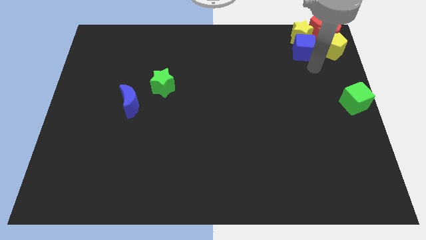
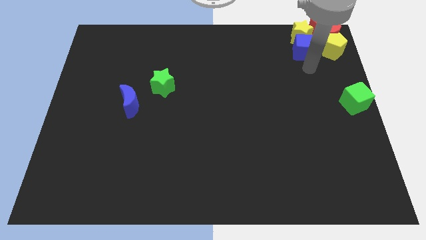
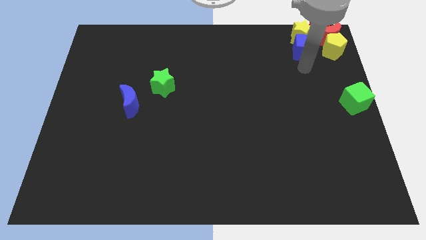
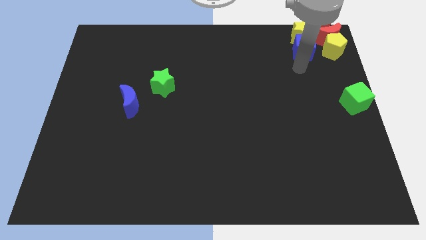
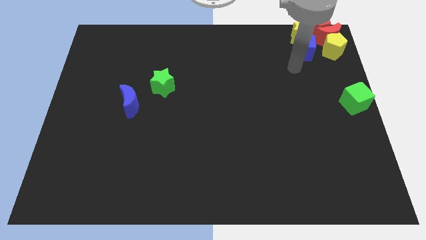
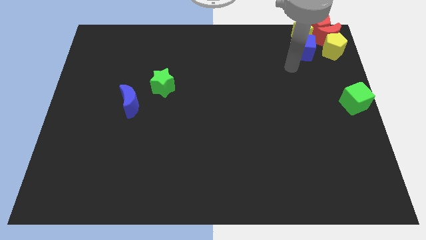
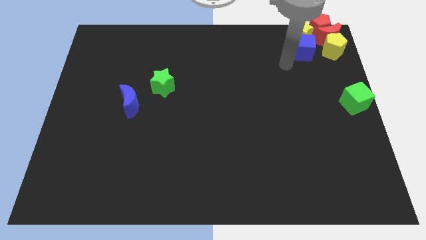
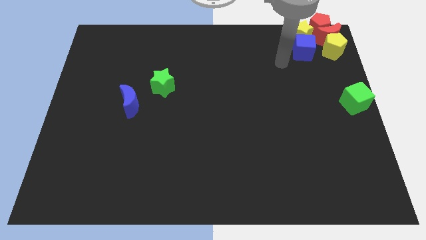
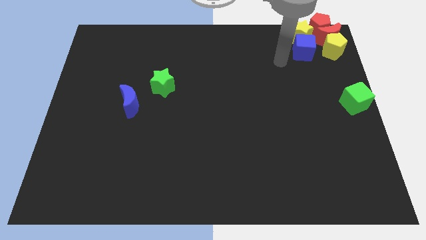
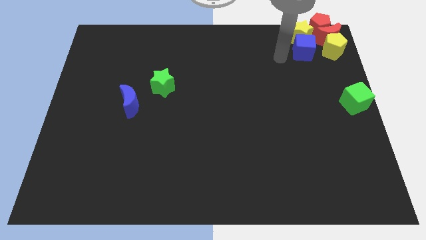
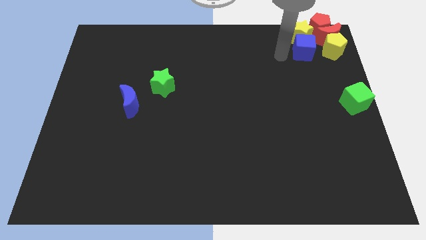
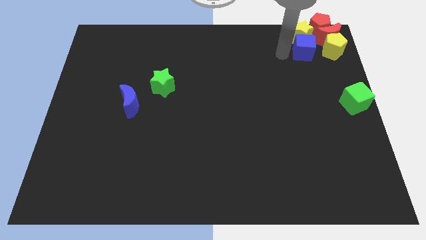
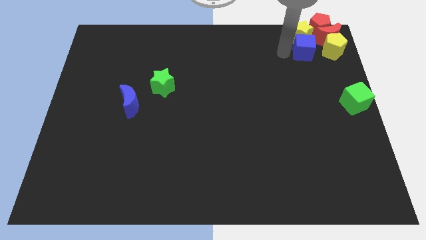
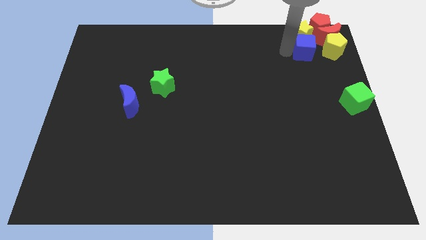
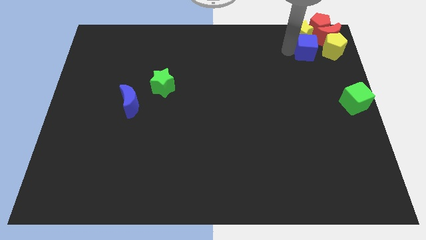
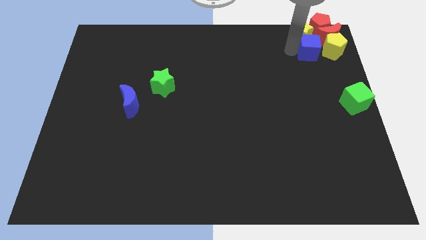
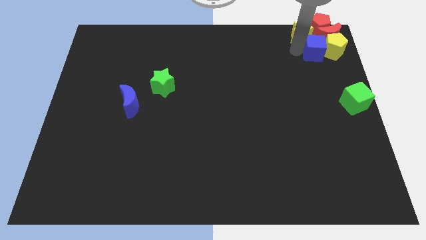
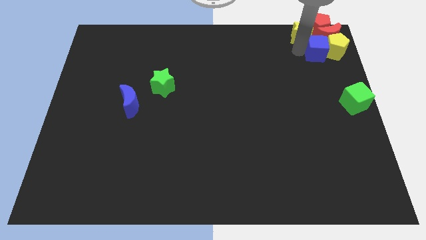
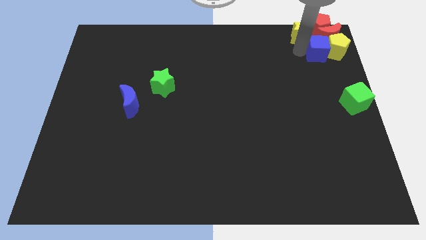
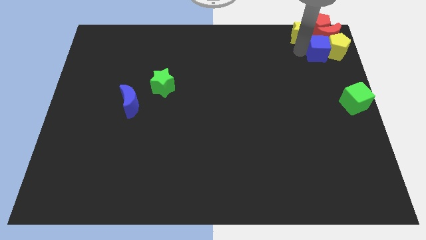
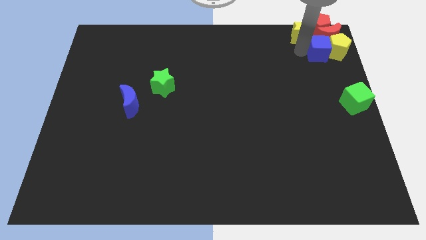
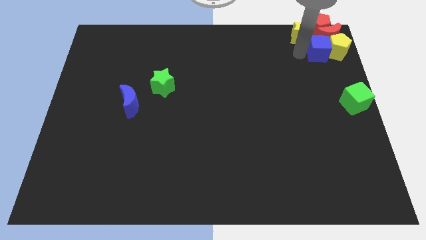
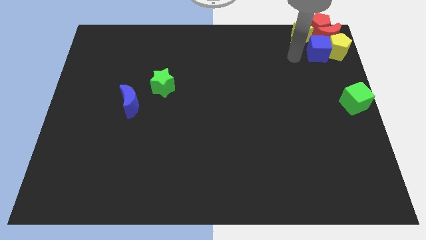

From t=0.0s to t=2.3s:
move the blue cube into the yellow pentagon

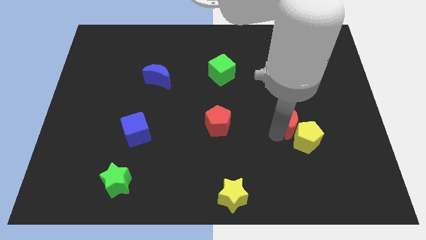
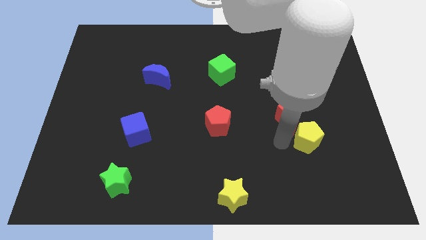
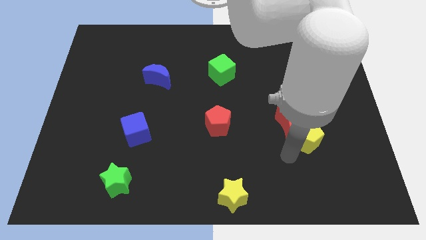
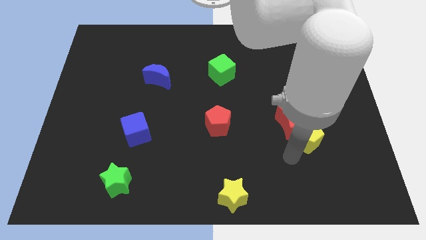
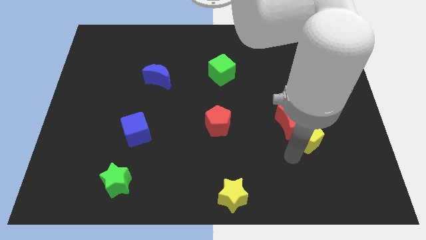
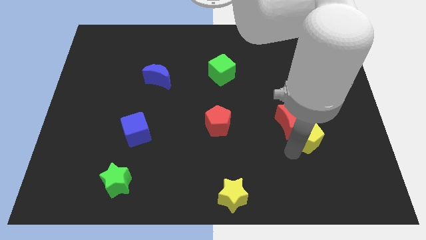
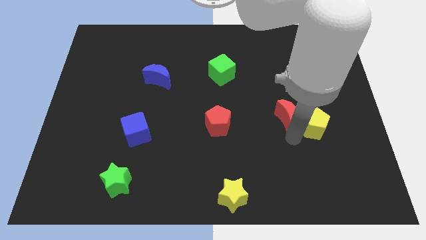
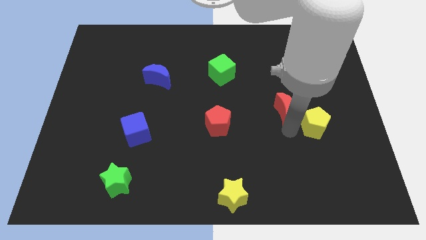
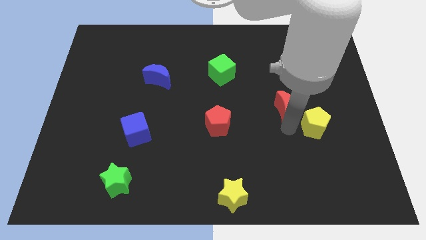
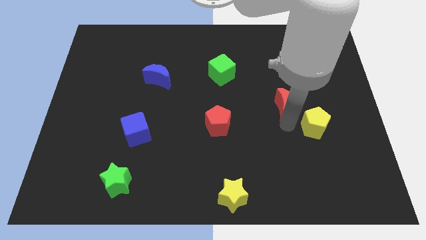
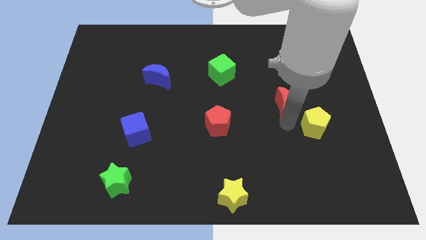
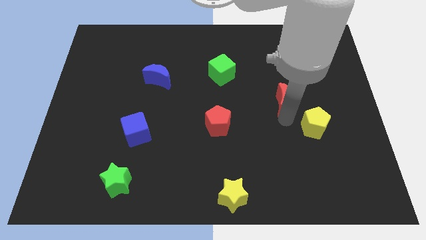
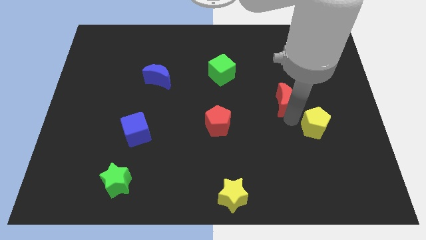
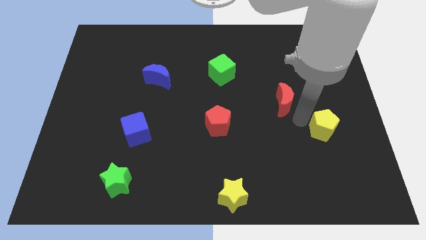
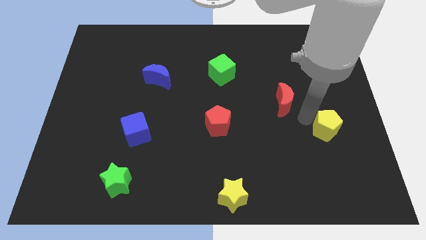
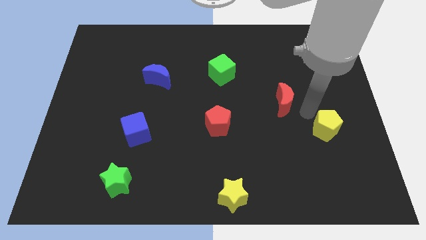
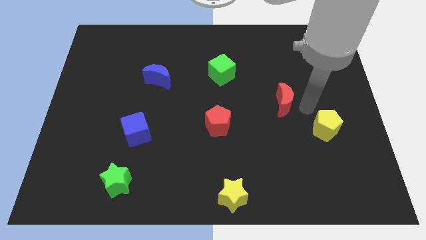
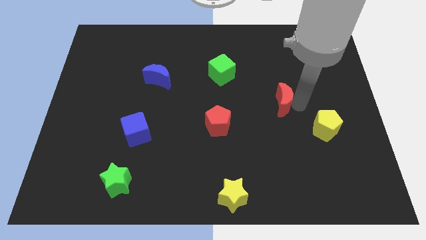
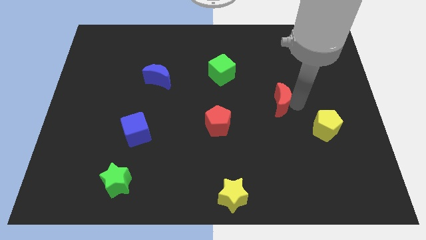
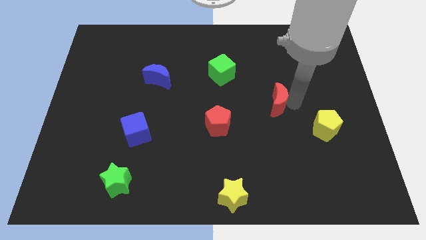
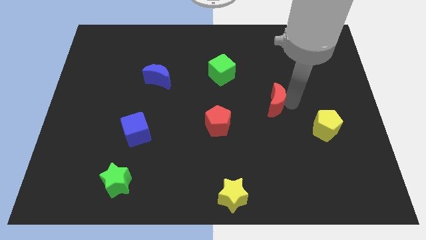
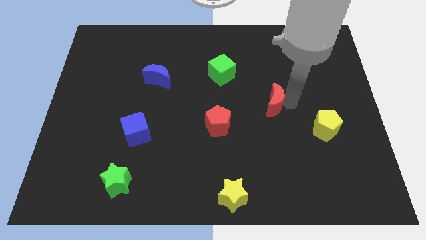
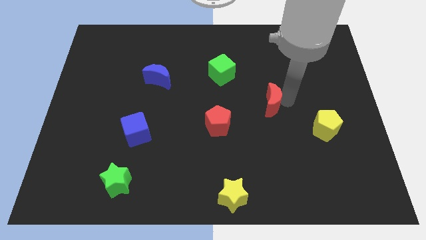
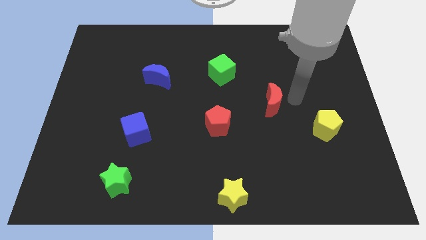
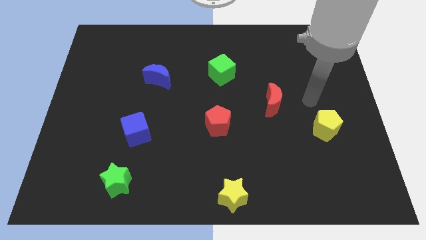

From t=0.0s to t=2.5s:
move the red crescent towards the center right of the board

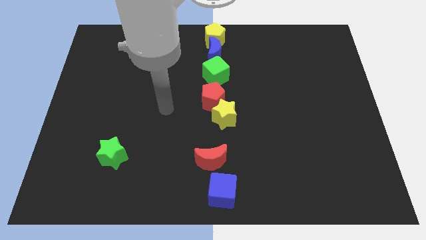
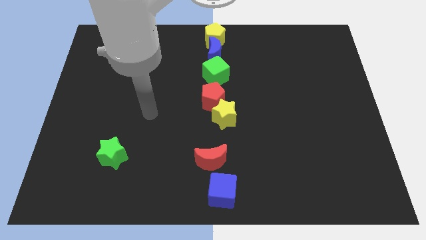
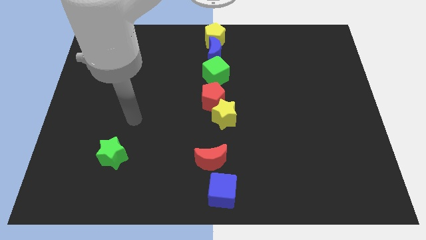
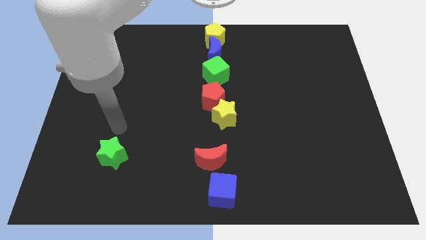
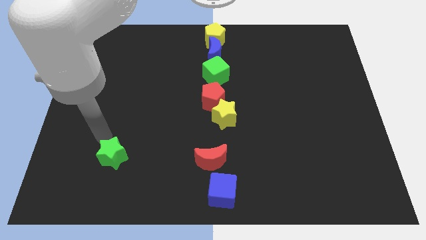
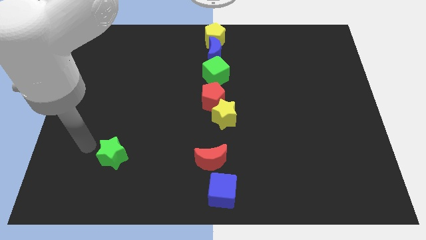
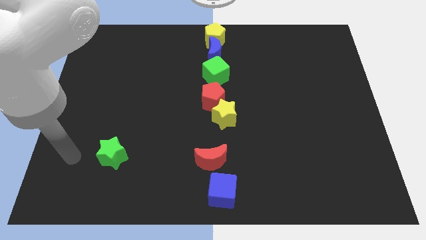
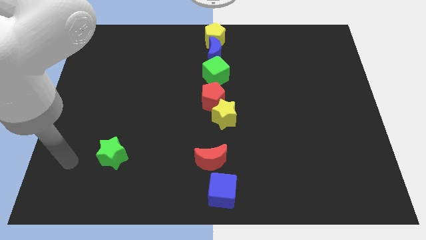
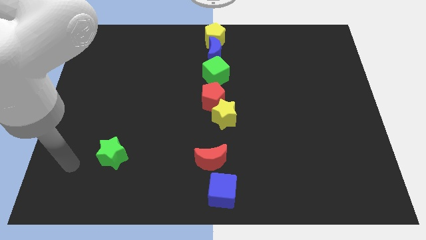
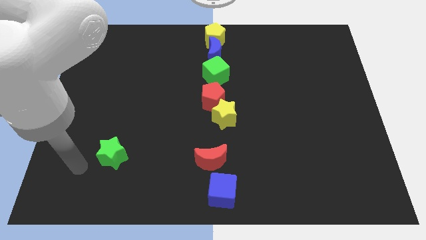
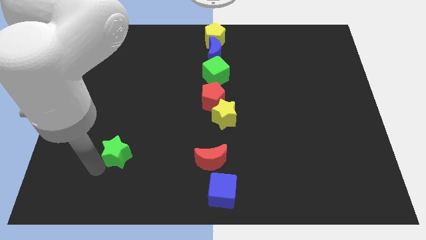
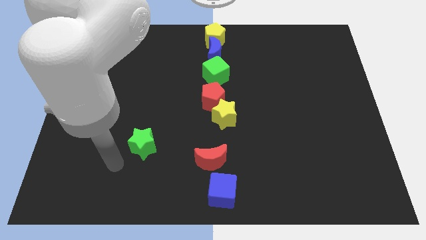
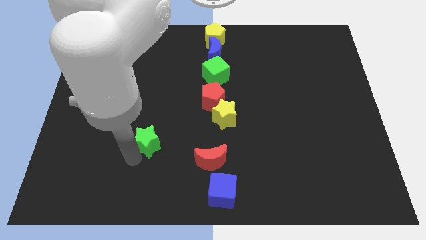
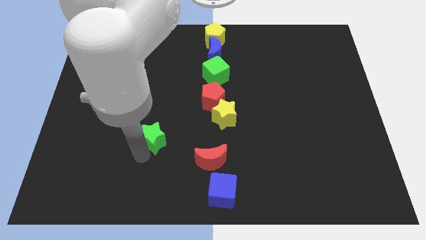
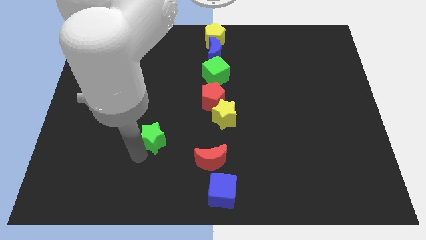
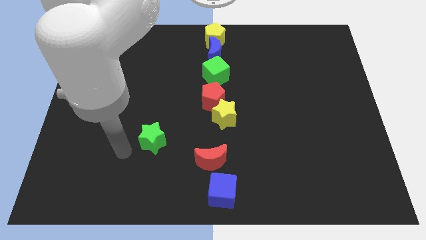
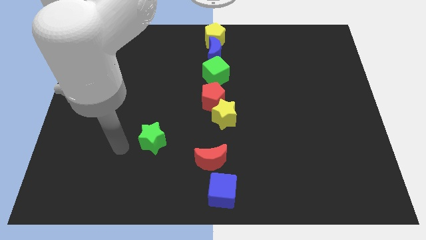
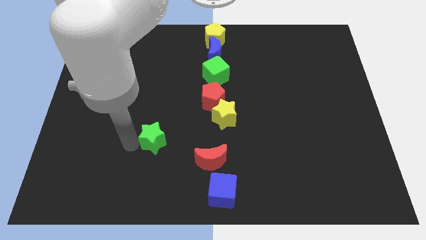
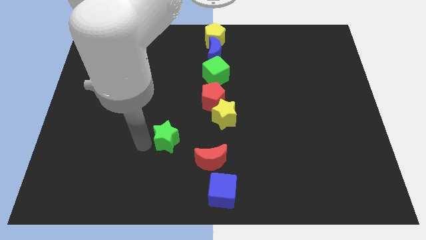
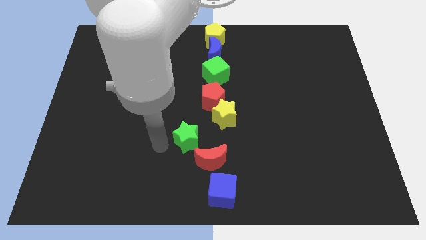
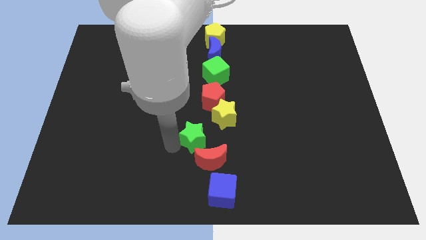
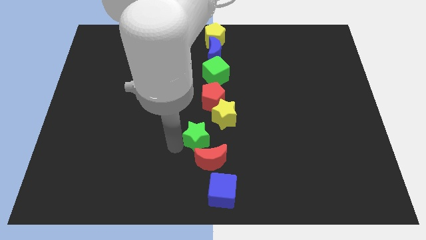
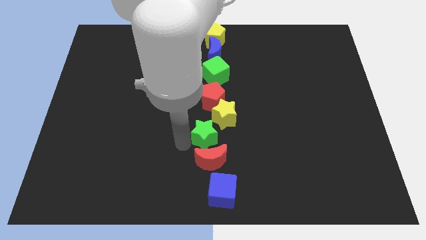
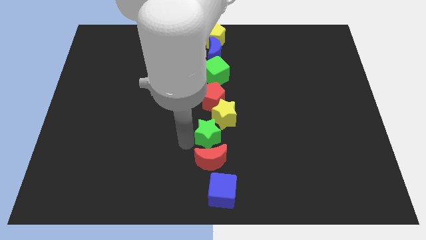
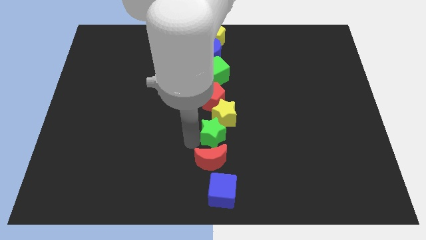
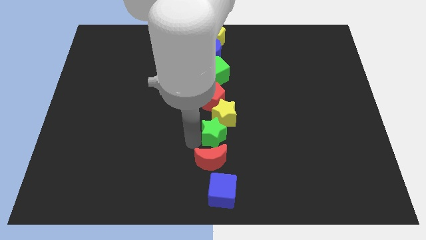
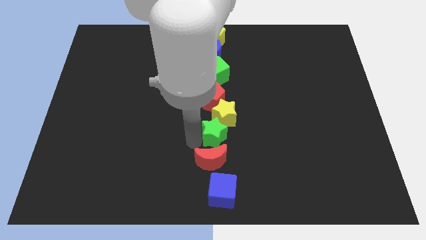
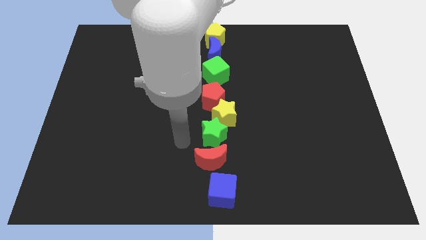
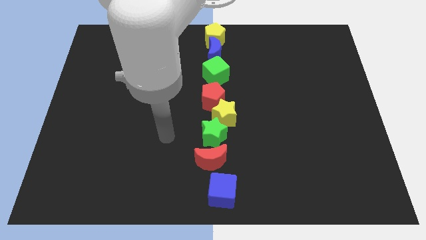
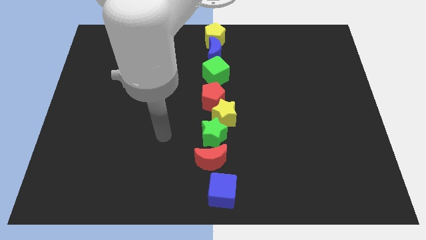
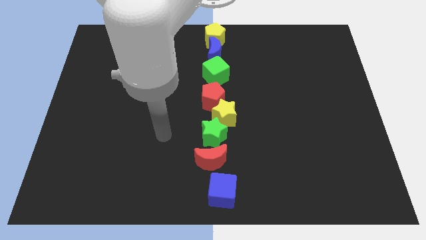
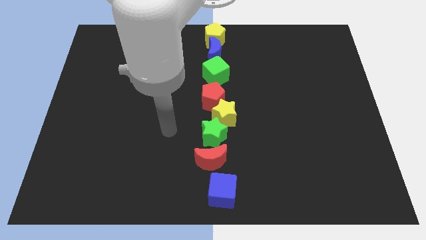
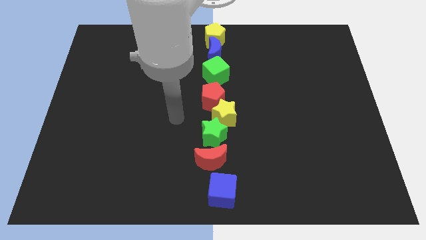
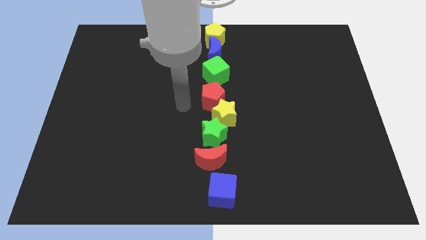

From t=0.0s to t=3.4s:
push the green star on the top of the red crescent

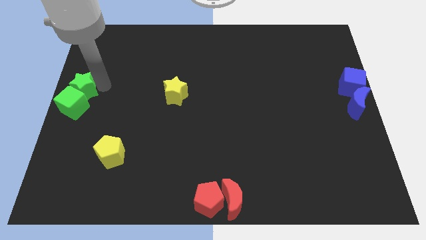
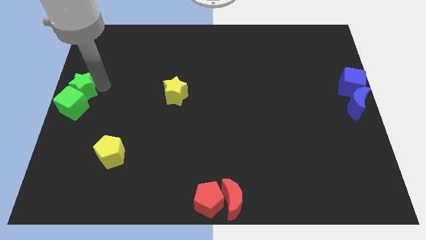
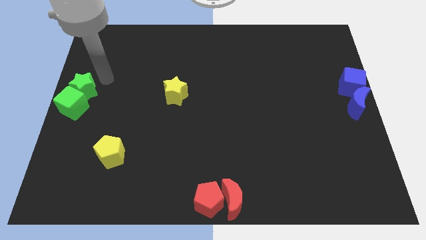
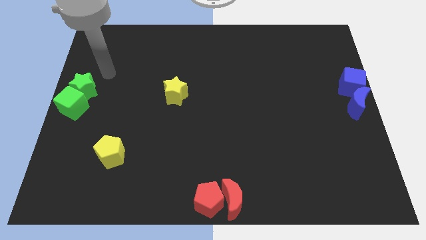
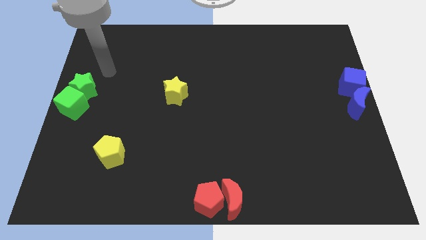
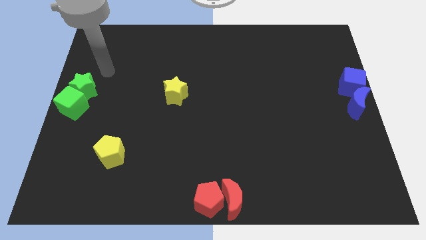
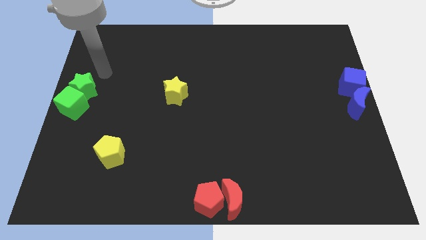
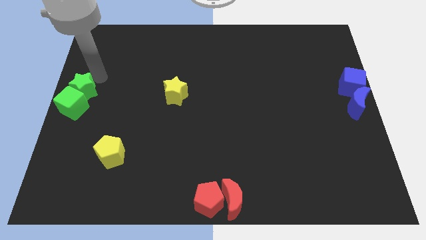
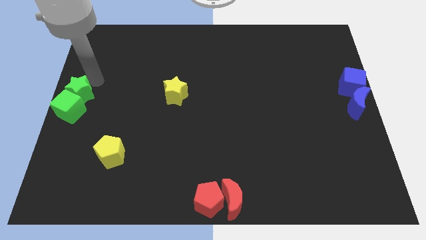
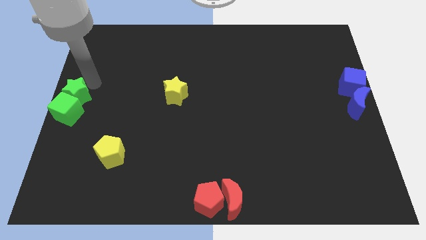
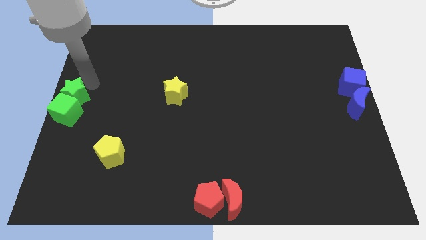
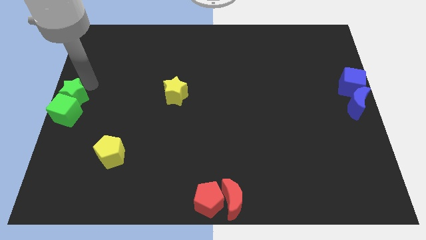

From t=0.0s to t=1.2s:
push the green stargreen cube towards the center left
